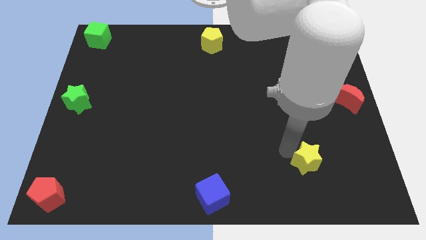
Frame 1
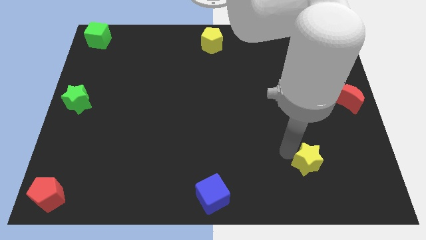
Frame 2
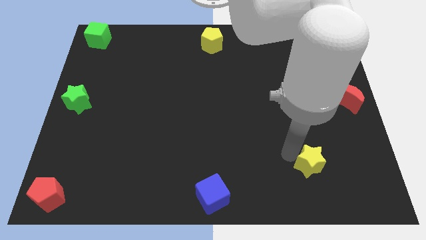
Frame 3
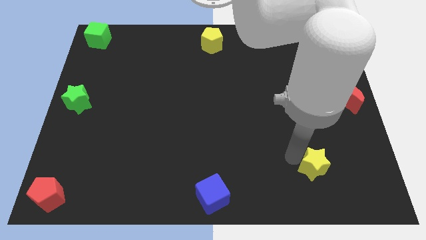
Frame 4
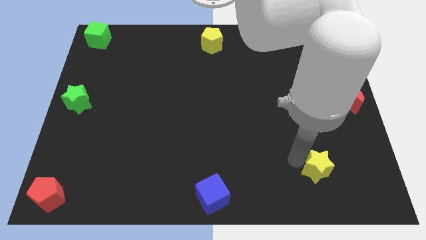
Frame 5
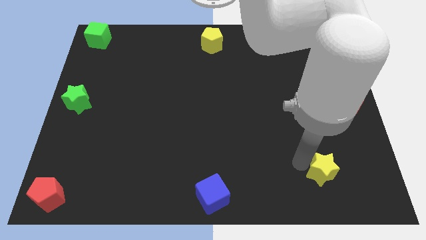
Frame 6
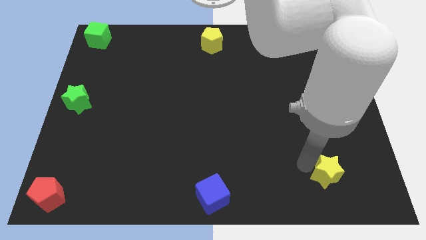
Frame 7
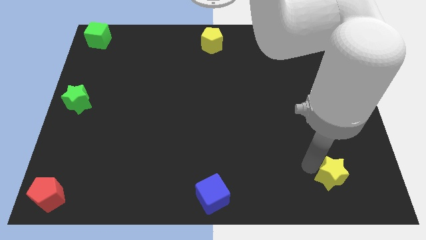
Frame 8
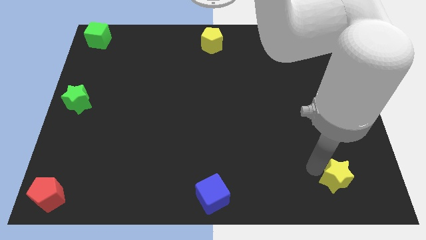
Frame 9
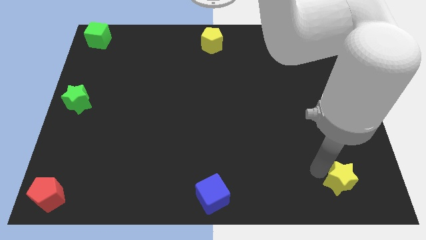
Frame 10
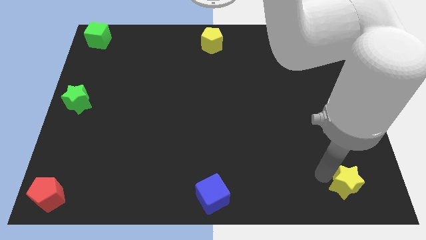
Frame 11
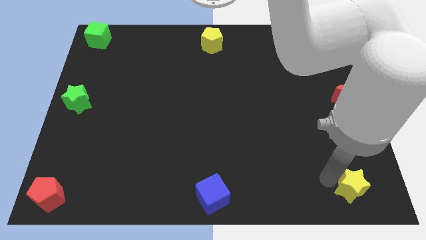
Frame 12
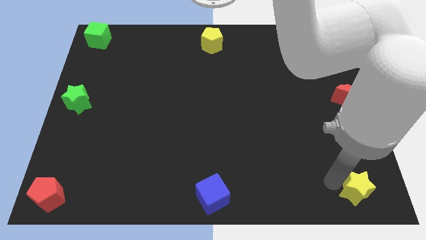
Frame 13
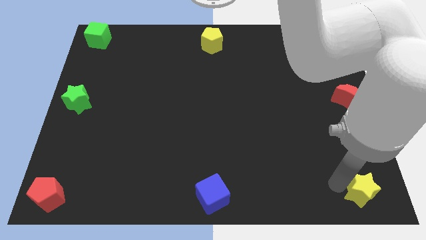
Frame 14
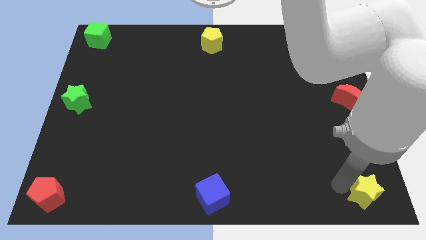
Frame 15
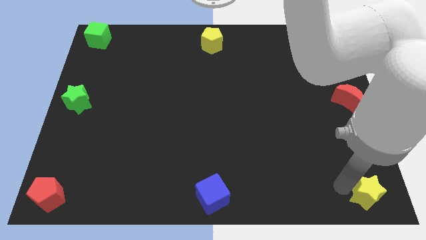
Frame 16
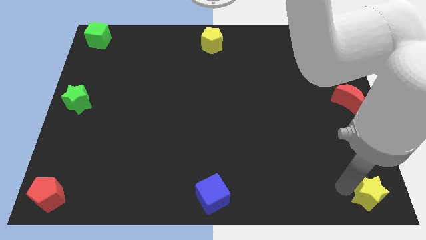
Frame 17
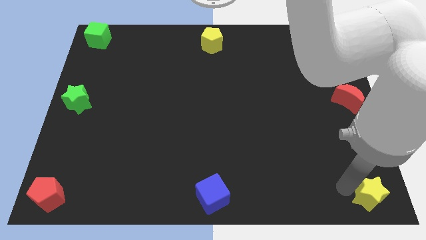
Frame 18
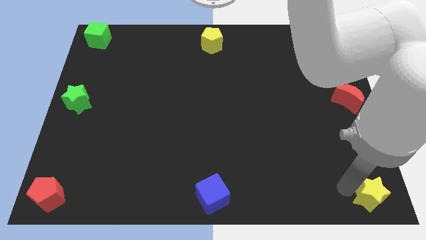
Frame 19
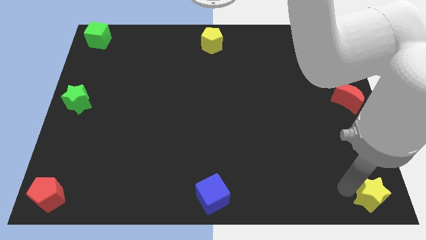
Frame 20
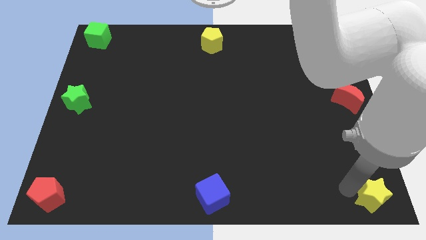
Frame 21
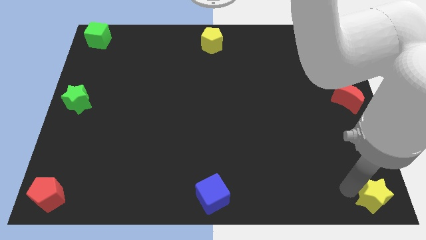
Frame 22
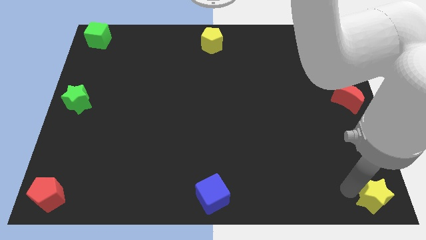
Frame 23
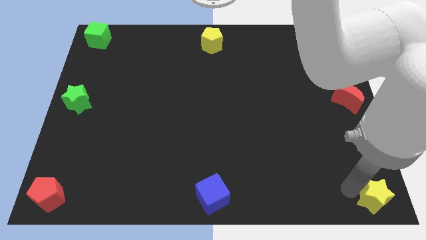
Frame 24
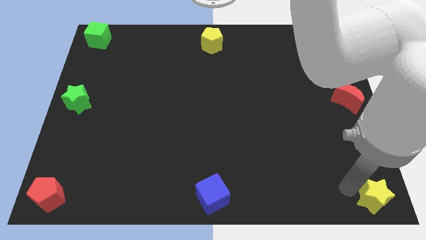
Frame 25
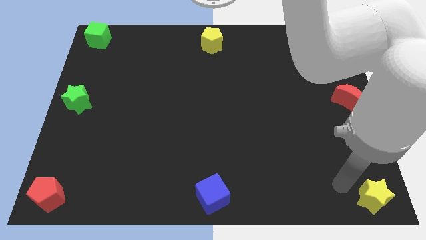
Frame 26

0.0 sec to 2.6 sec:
place the yellow star at the bottom right of the board

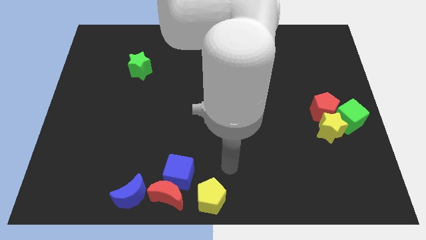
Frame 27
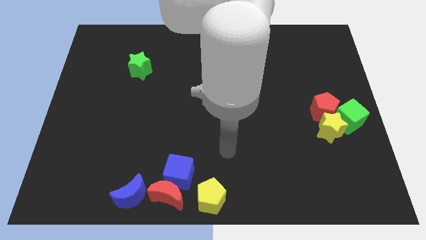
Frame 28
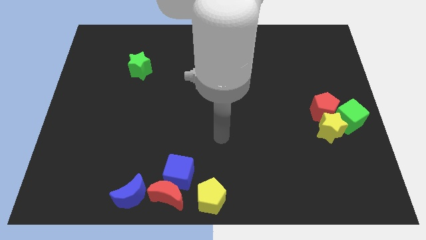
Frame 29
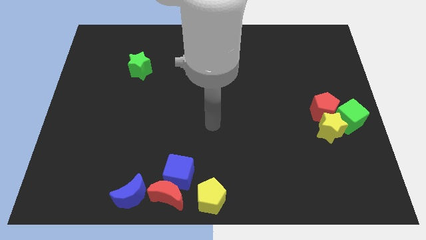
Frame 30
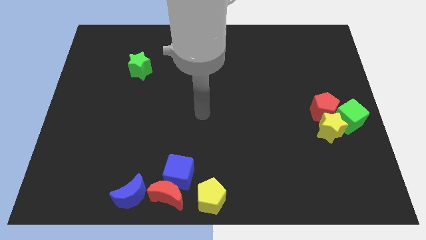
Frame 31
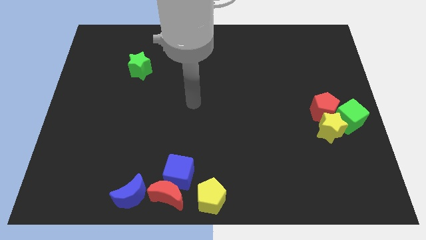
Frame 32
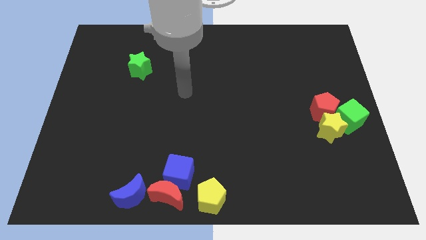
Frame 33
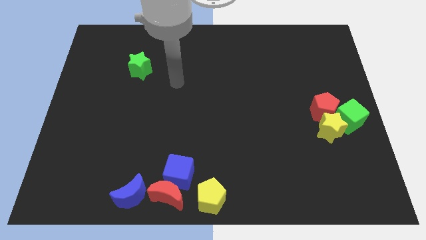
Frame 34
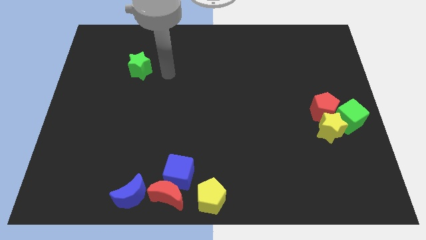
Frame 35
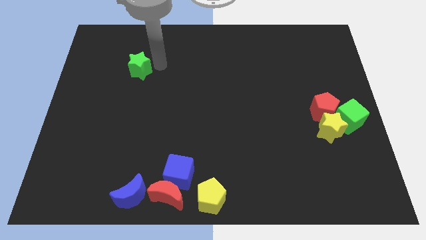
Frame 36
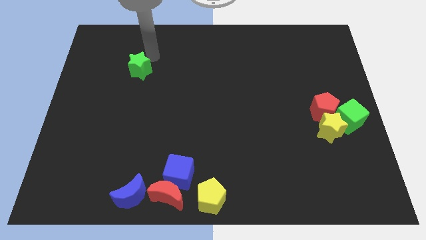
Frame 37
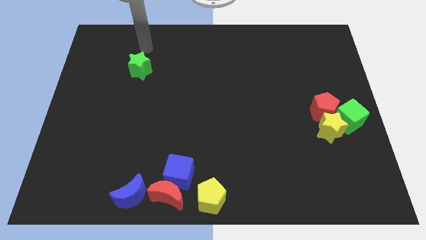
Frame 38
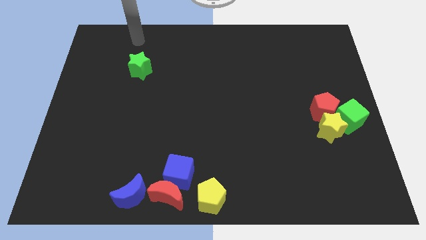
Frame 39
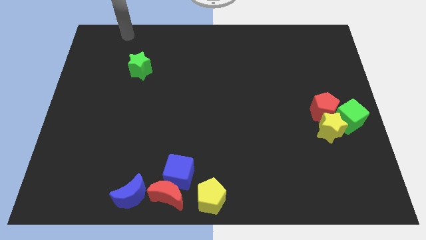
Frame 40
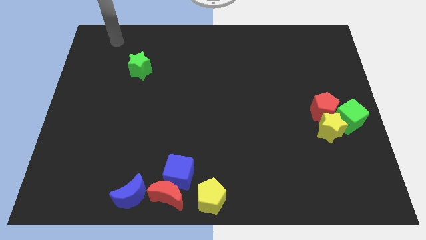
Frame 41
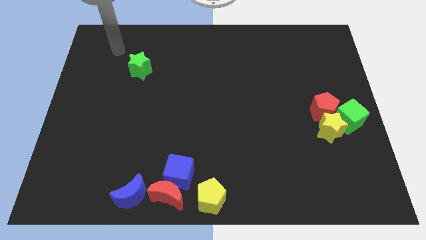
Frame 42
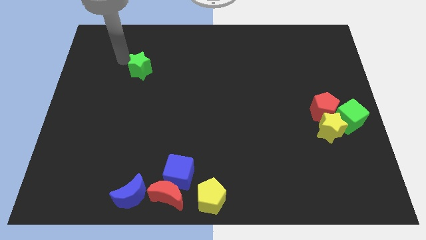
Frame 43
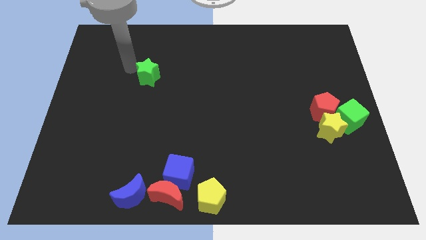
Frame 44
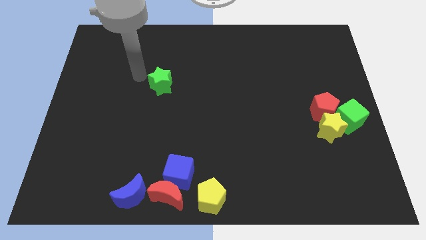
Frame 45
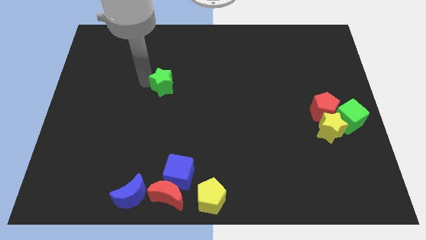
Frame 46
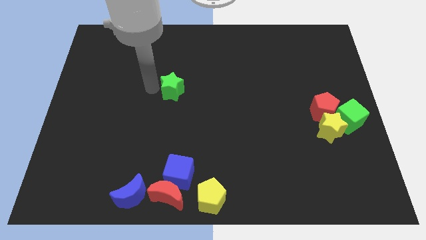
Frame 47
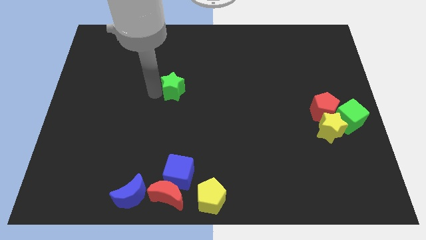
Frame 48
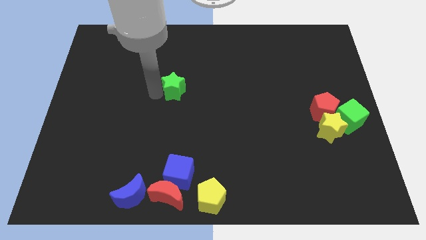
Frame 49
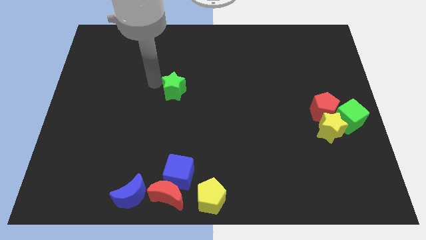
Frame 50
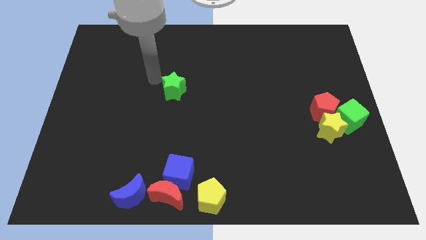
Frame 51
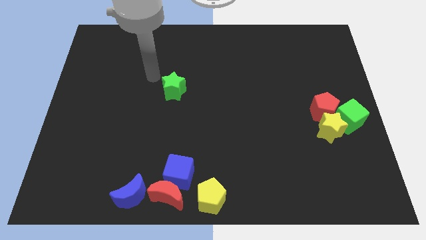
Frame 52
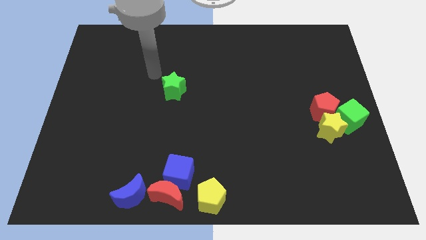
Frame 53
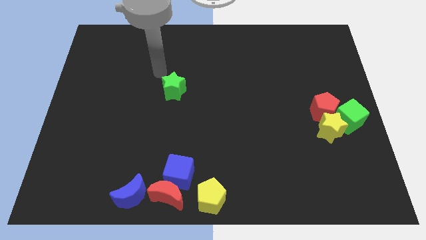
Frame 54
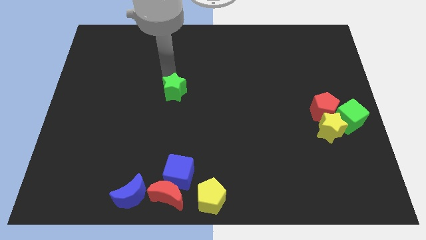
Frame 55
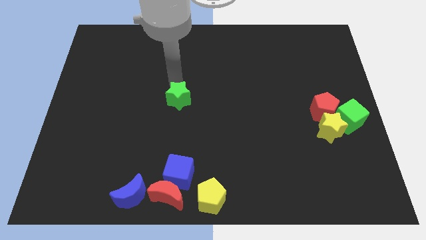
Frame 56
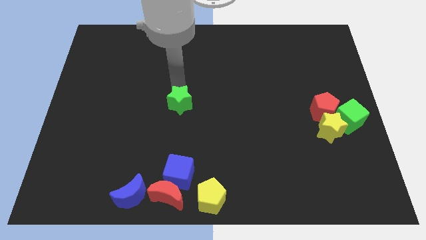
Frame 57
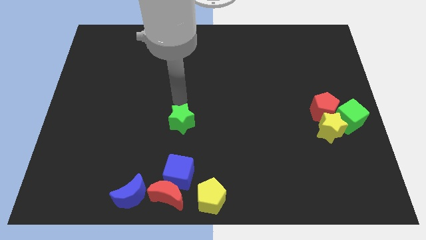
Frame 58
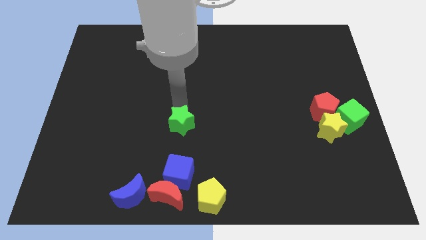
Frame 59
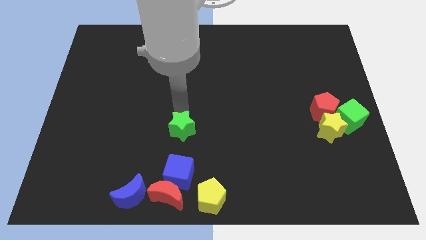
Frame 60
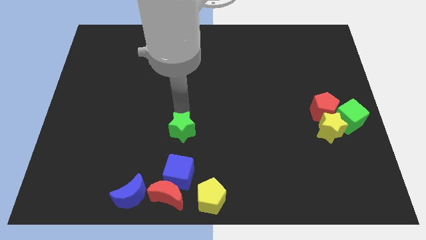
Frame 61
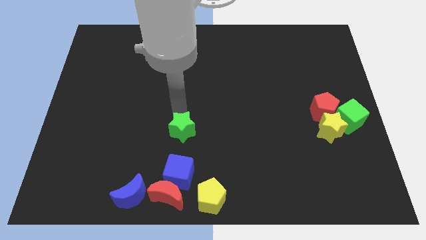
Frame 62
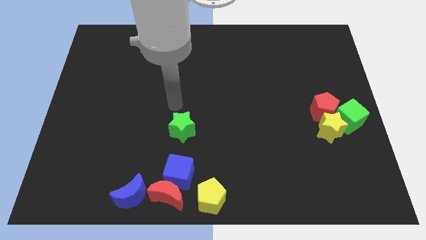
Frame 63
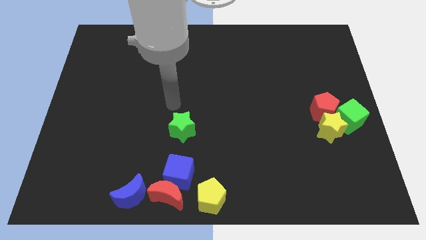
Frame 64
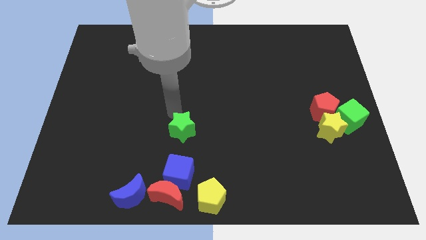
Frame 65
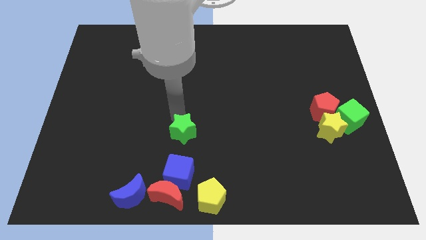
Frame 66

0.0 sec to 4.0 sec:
place the green star on top of the blue cube

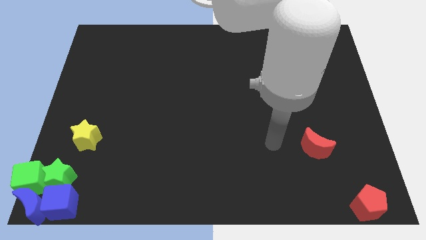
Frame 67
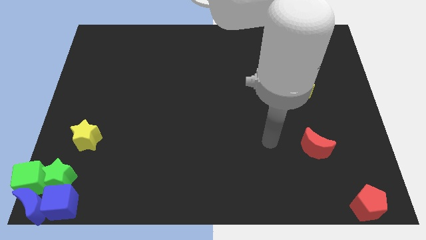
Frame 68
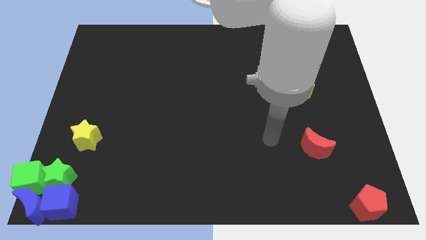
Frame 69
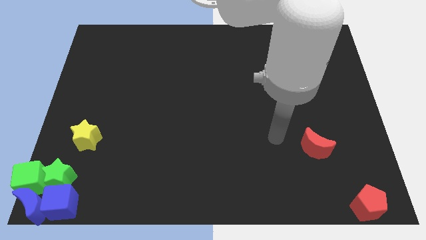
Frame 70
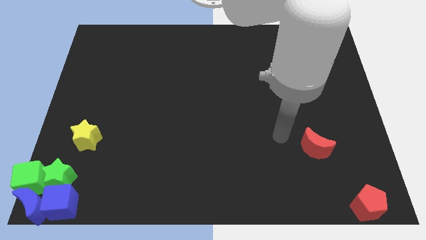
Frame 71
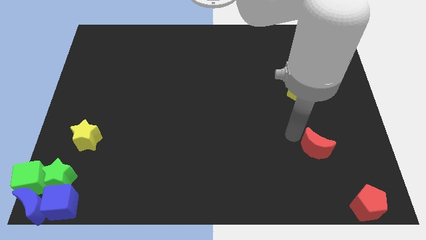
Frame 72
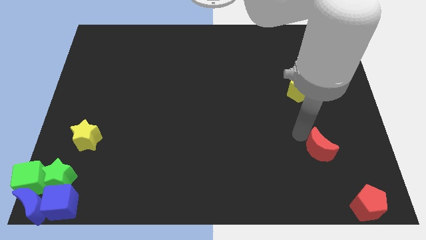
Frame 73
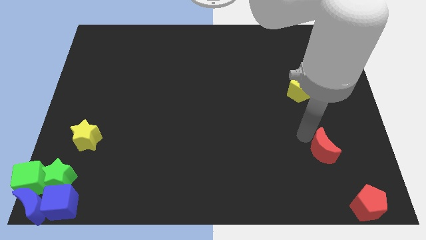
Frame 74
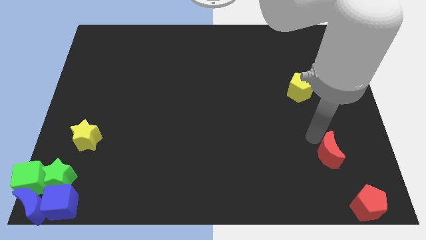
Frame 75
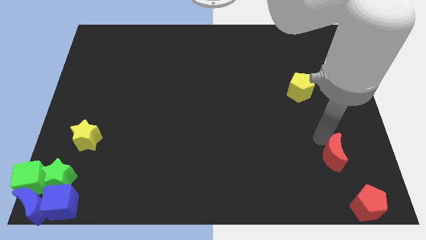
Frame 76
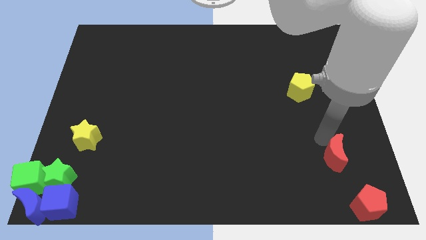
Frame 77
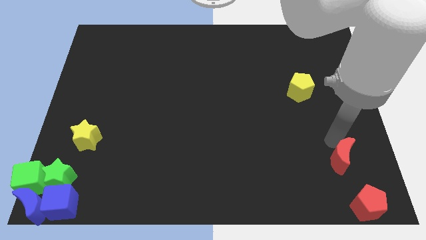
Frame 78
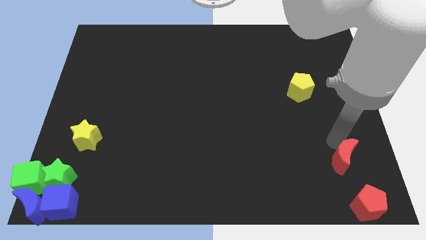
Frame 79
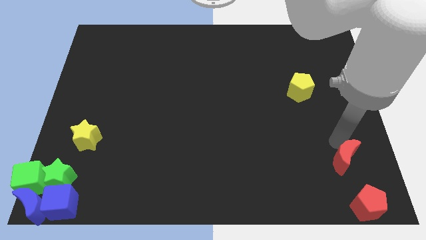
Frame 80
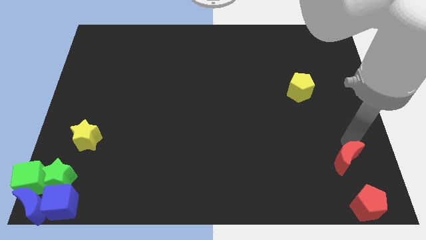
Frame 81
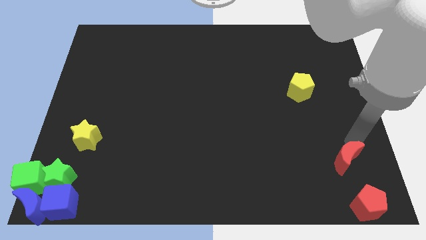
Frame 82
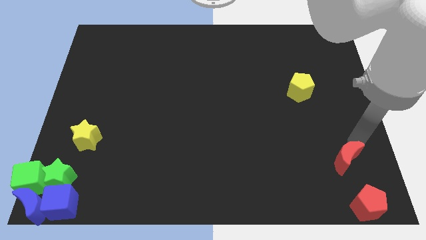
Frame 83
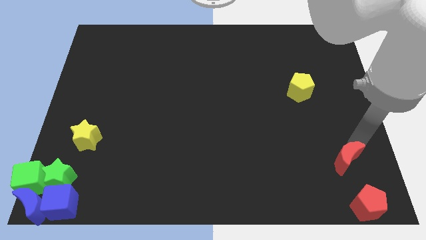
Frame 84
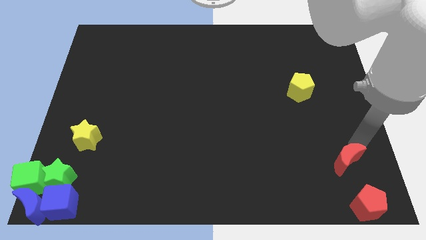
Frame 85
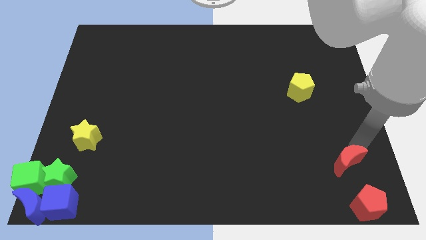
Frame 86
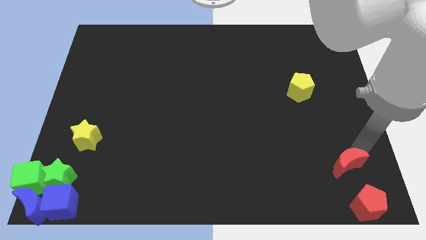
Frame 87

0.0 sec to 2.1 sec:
push the red crescent towards the bottom right side of the board

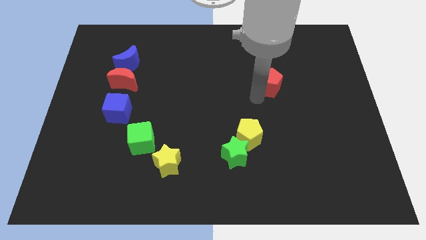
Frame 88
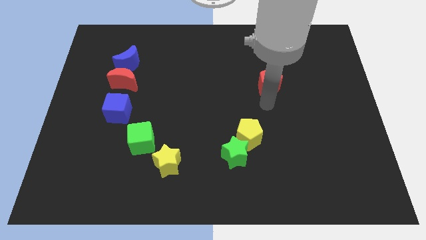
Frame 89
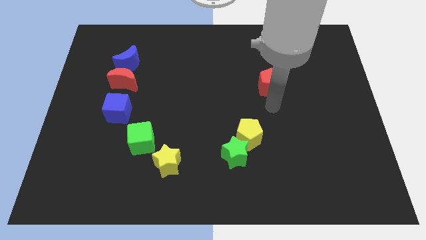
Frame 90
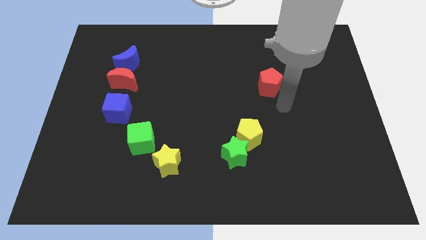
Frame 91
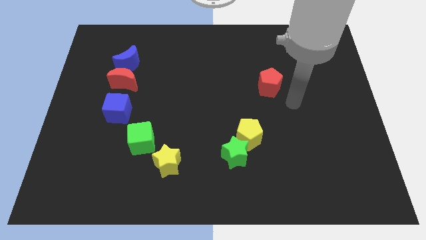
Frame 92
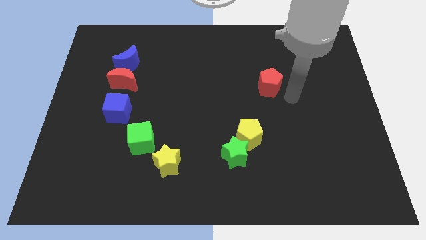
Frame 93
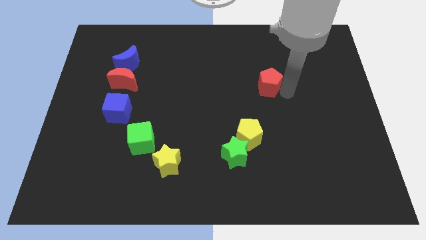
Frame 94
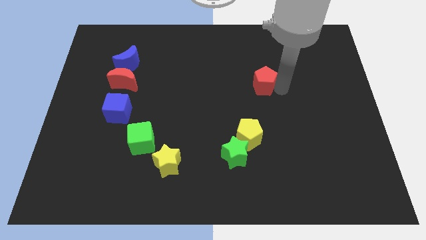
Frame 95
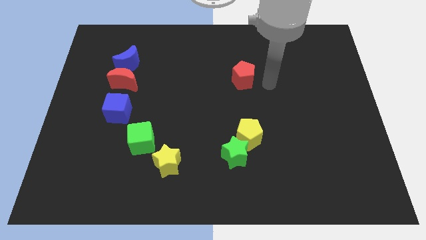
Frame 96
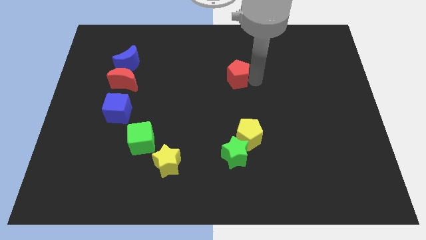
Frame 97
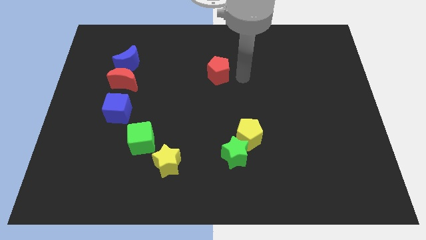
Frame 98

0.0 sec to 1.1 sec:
place red pentagon close to the top center of the board
